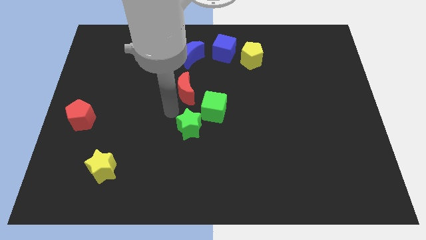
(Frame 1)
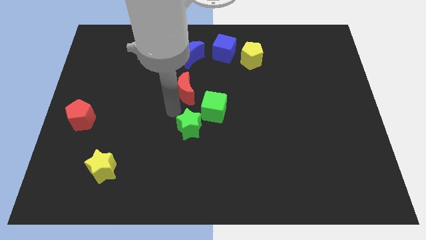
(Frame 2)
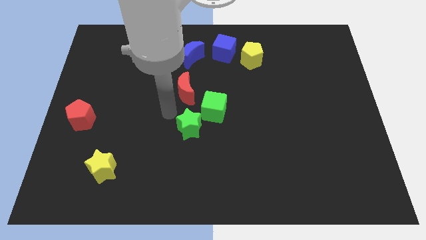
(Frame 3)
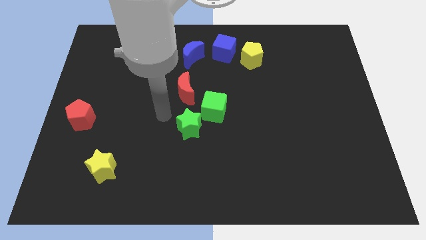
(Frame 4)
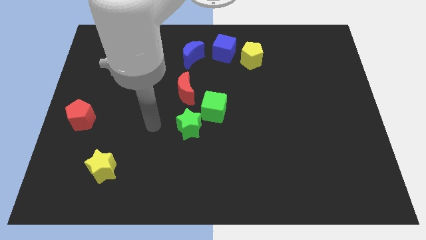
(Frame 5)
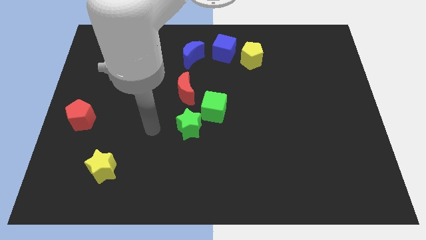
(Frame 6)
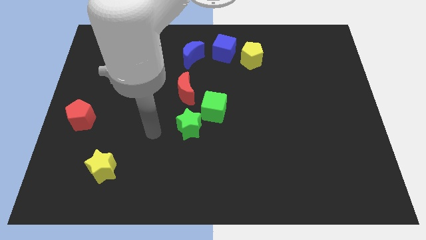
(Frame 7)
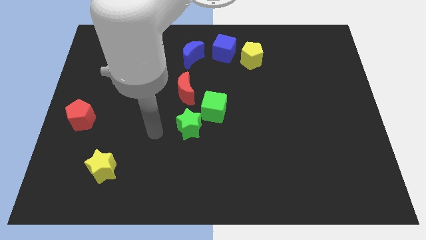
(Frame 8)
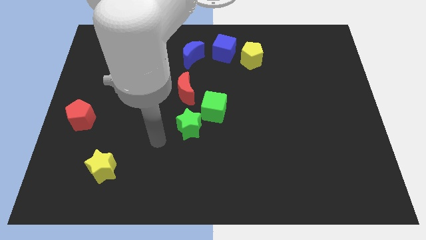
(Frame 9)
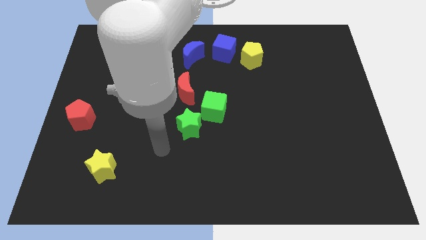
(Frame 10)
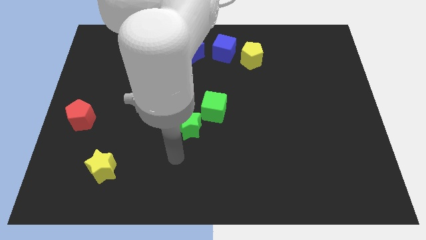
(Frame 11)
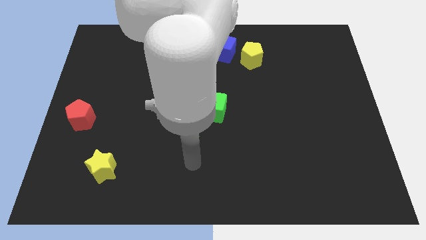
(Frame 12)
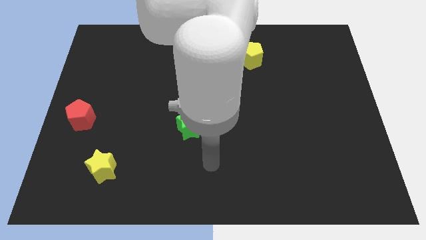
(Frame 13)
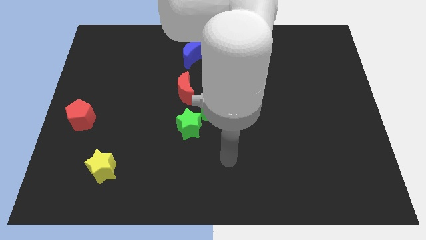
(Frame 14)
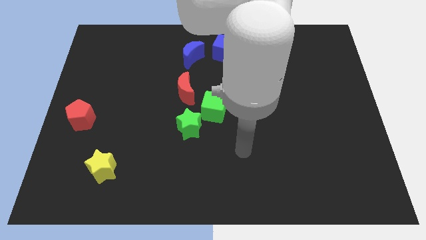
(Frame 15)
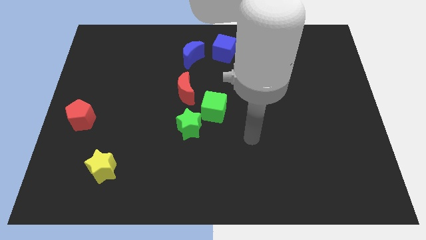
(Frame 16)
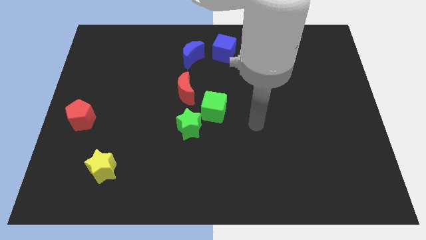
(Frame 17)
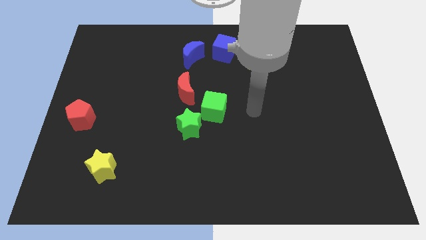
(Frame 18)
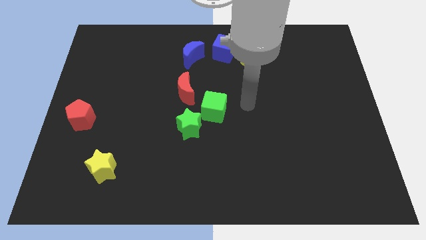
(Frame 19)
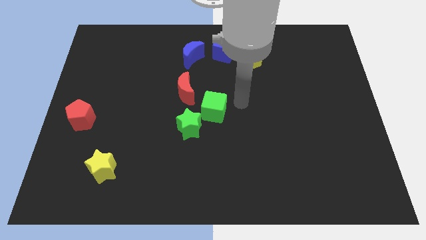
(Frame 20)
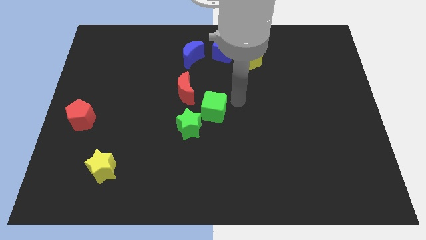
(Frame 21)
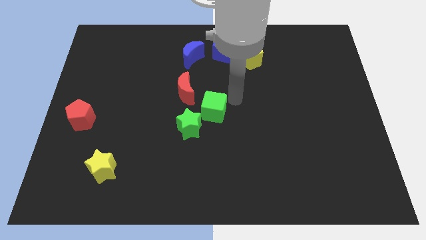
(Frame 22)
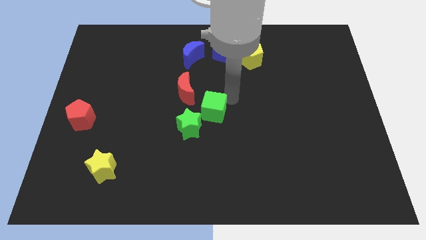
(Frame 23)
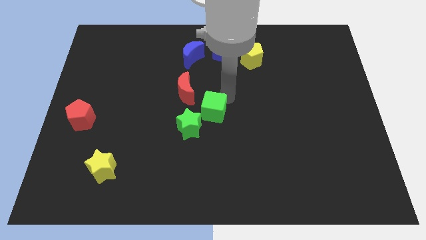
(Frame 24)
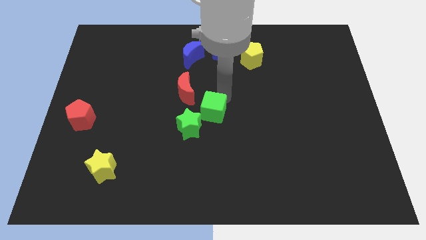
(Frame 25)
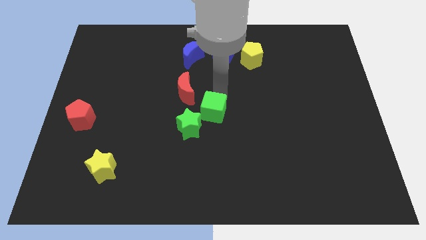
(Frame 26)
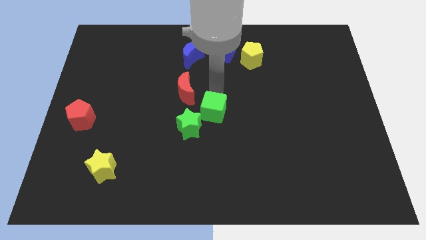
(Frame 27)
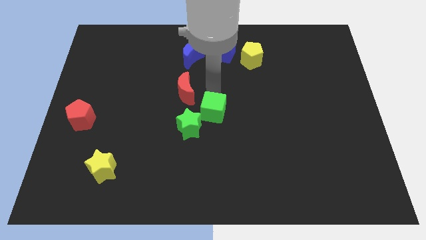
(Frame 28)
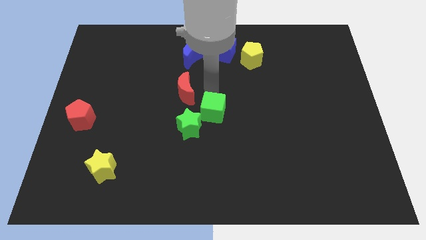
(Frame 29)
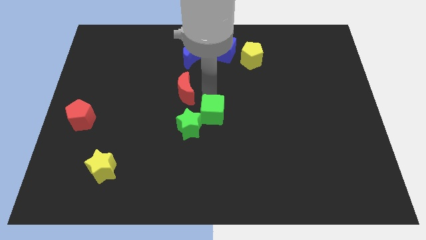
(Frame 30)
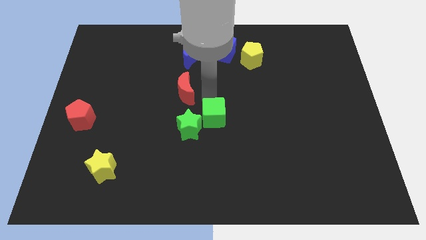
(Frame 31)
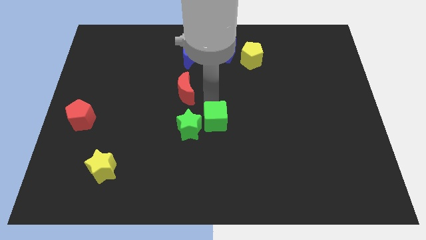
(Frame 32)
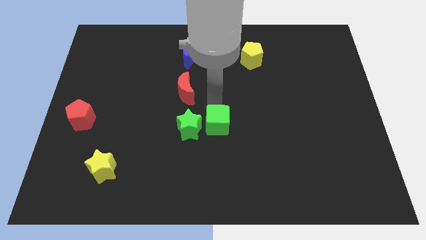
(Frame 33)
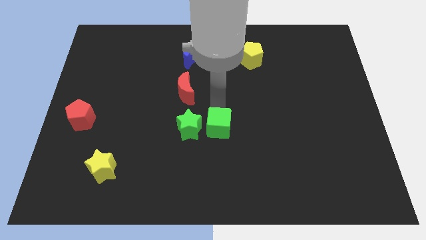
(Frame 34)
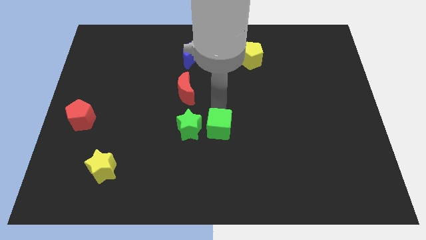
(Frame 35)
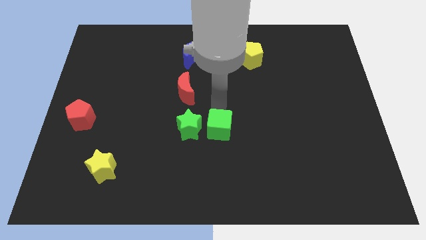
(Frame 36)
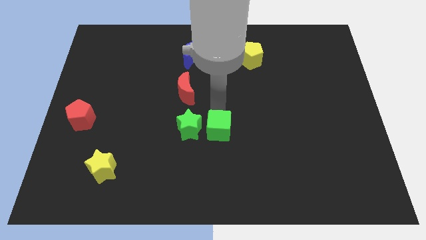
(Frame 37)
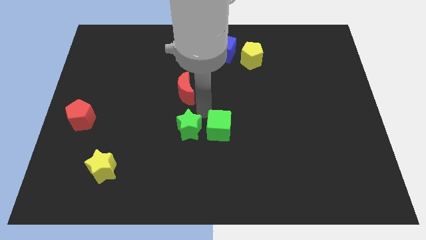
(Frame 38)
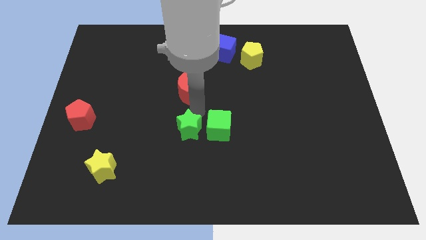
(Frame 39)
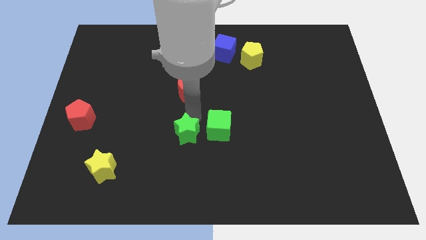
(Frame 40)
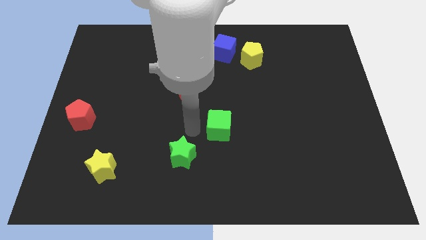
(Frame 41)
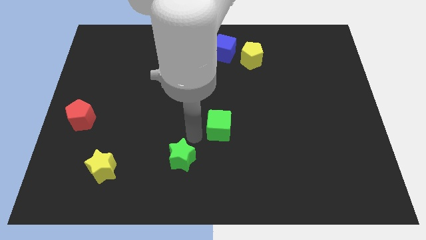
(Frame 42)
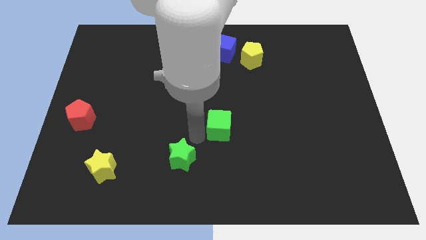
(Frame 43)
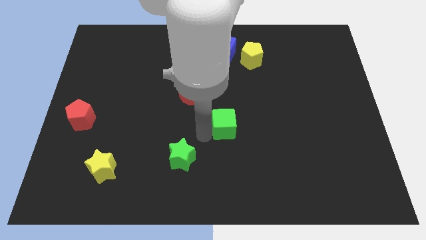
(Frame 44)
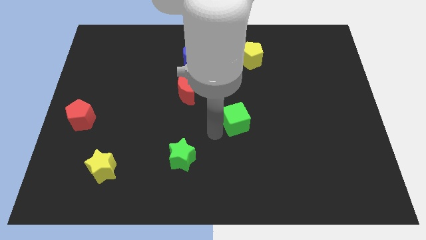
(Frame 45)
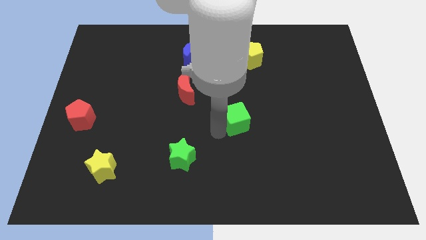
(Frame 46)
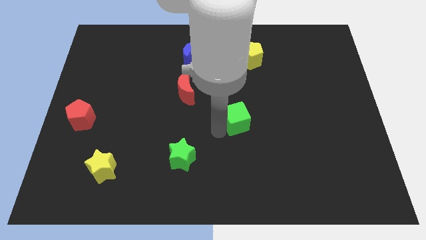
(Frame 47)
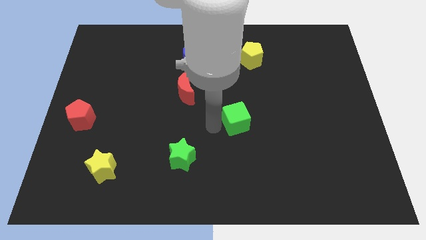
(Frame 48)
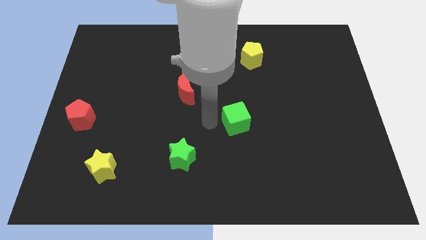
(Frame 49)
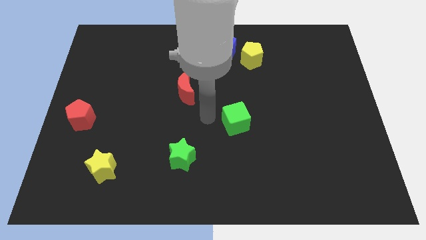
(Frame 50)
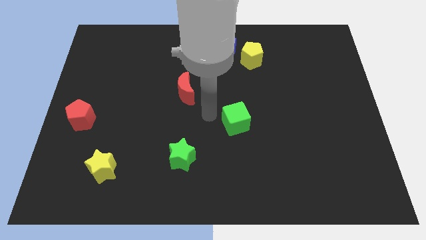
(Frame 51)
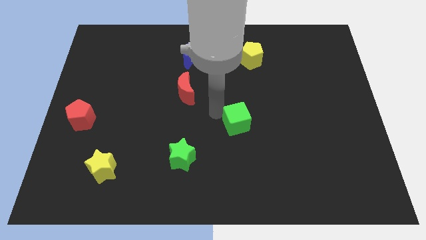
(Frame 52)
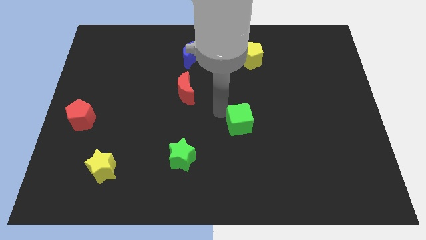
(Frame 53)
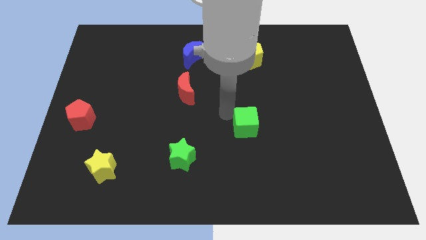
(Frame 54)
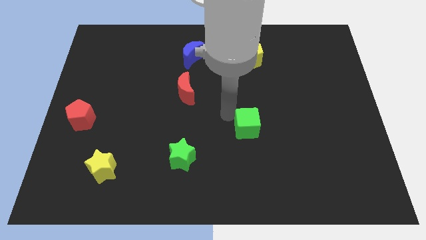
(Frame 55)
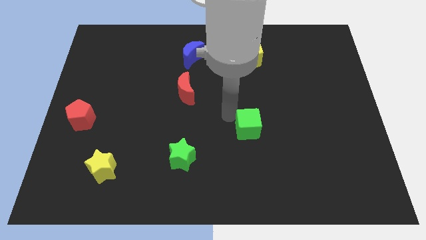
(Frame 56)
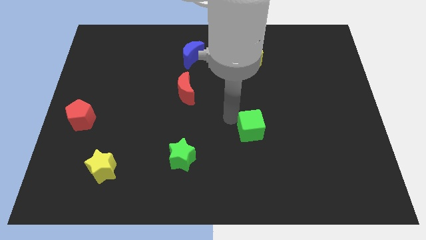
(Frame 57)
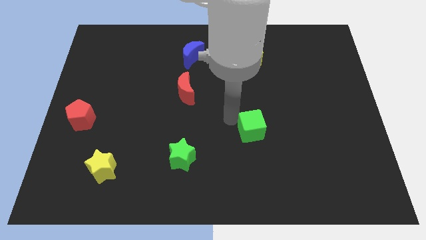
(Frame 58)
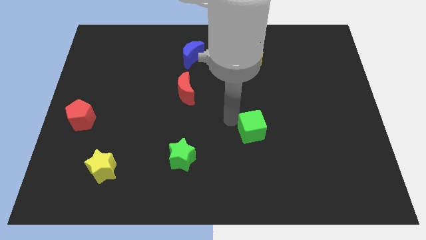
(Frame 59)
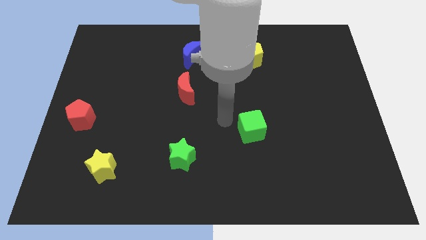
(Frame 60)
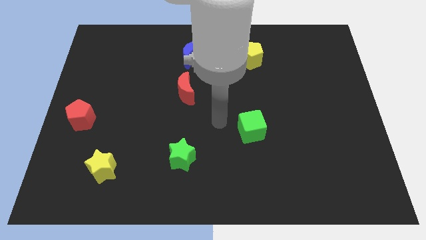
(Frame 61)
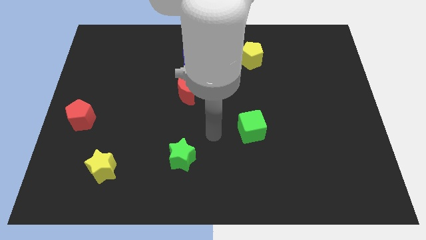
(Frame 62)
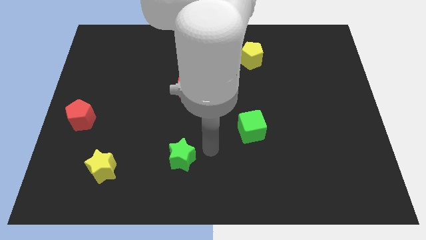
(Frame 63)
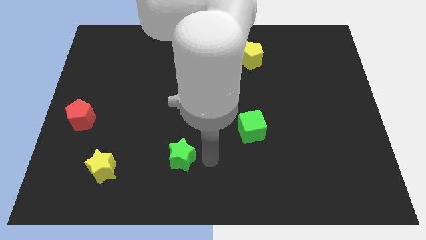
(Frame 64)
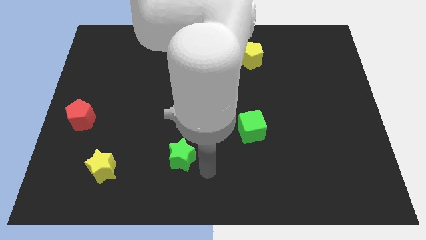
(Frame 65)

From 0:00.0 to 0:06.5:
separate the green cube and the green star

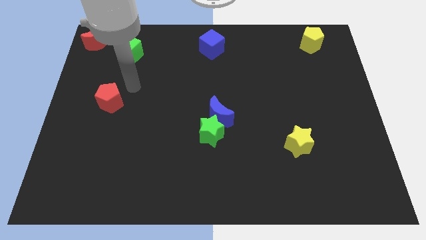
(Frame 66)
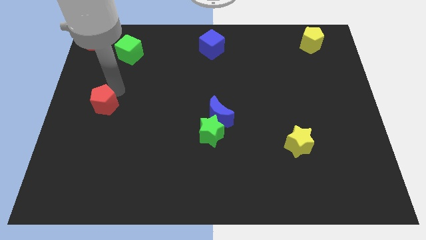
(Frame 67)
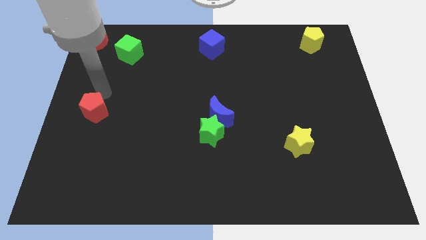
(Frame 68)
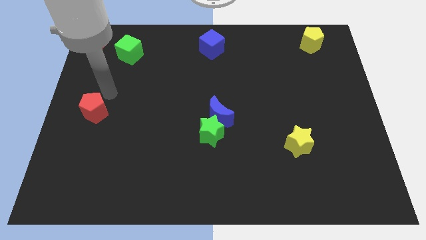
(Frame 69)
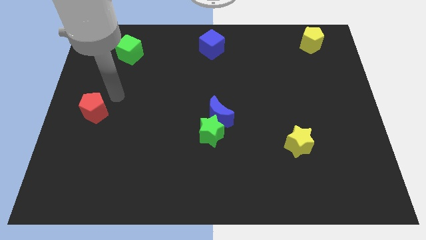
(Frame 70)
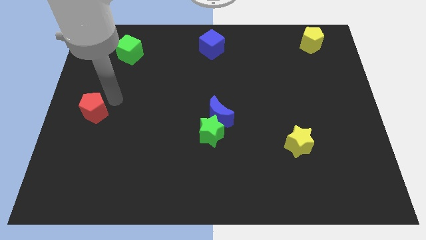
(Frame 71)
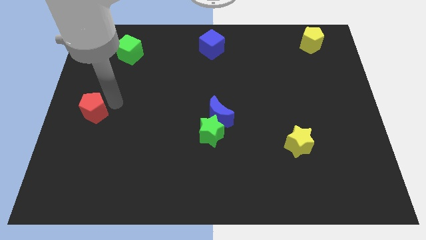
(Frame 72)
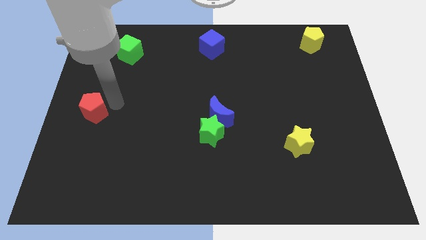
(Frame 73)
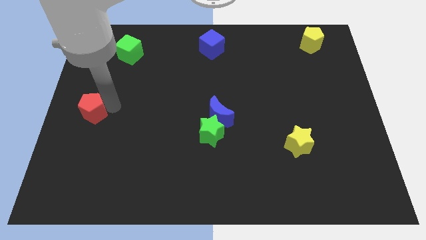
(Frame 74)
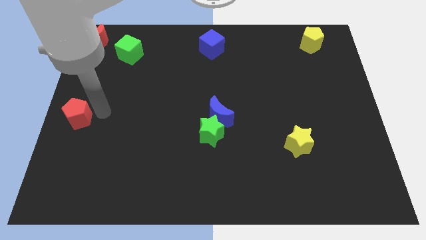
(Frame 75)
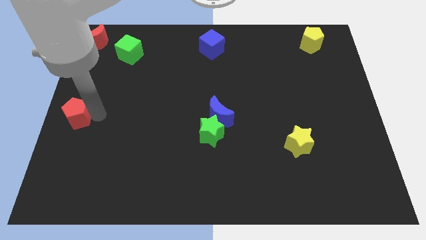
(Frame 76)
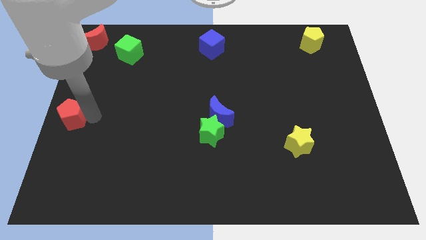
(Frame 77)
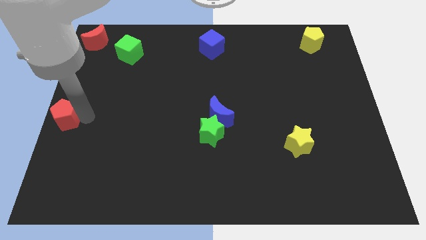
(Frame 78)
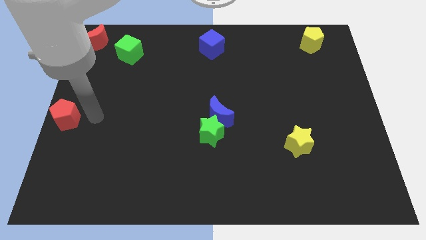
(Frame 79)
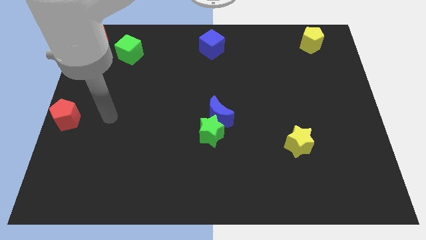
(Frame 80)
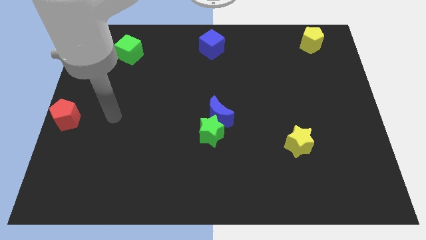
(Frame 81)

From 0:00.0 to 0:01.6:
place the red pentagon at the center left of the board

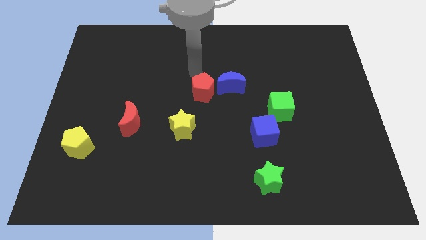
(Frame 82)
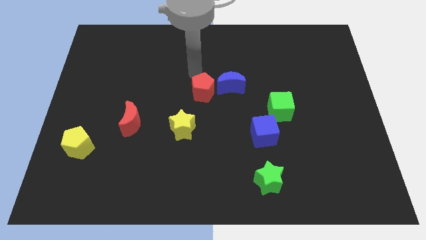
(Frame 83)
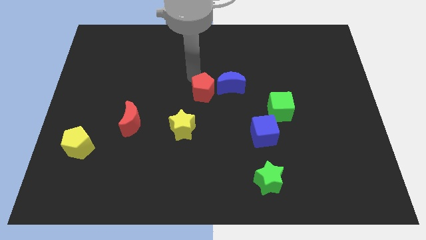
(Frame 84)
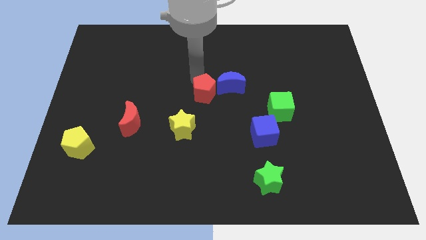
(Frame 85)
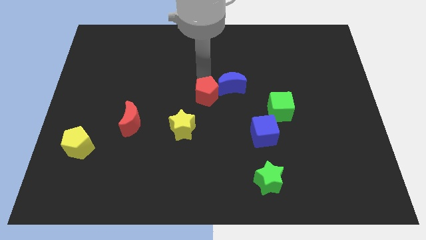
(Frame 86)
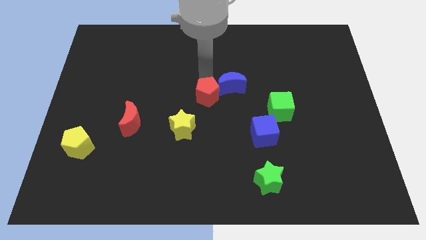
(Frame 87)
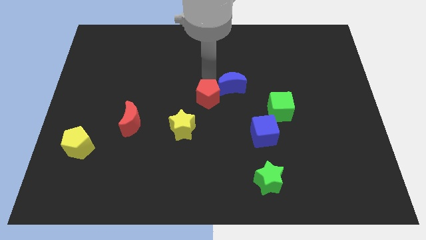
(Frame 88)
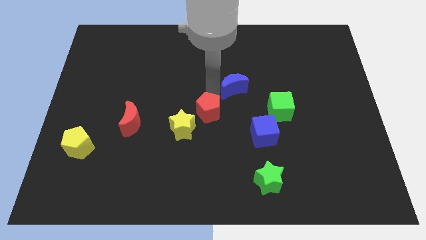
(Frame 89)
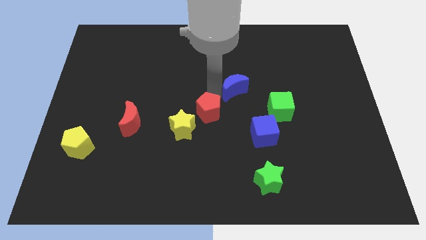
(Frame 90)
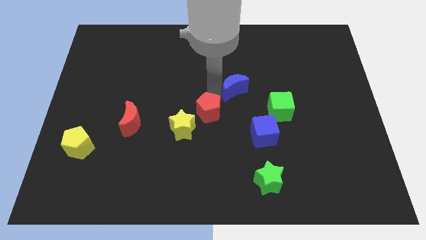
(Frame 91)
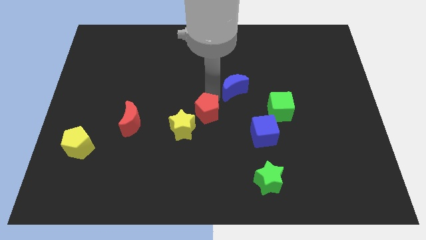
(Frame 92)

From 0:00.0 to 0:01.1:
move the red pentagon close to the yellow star
